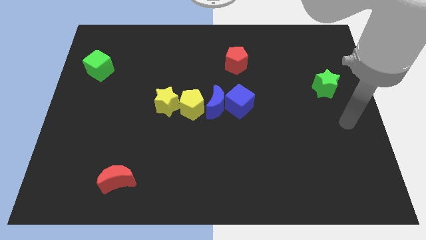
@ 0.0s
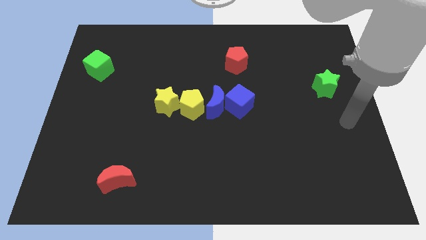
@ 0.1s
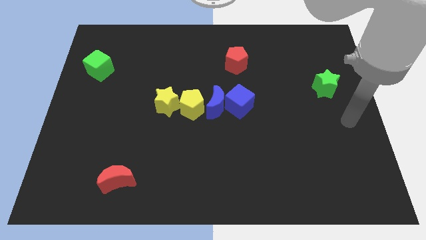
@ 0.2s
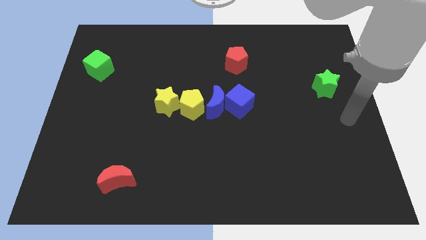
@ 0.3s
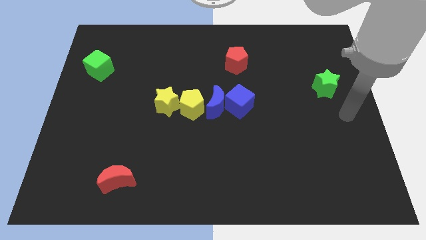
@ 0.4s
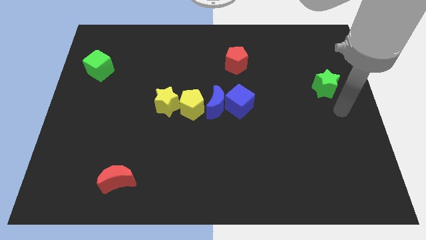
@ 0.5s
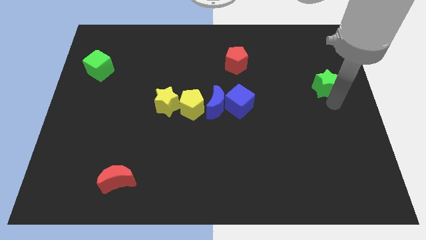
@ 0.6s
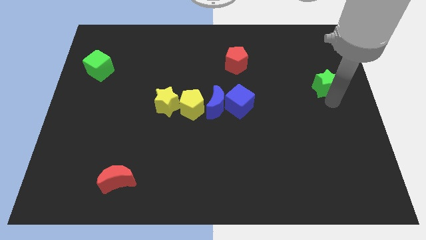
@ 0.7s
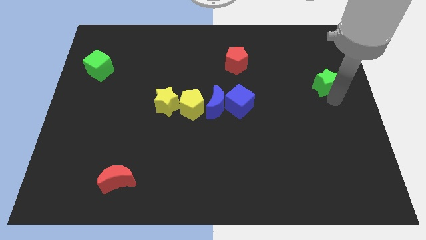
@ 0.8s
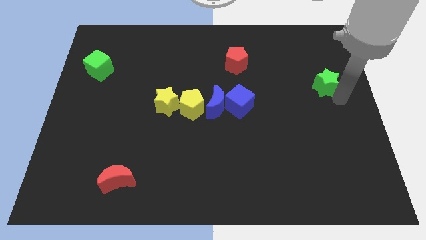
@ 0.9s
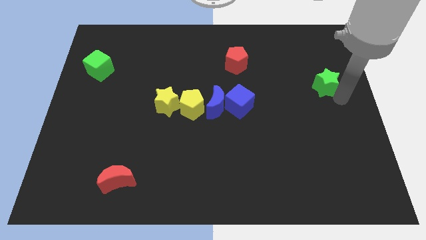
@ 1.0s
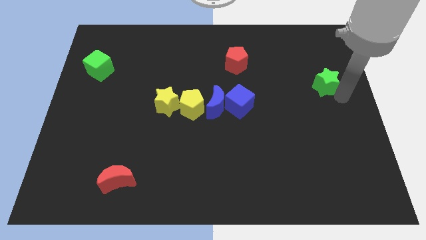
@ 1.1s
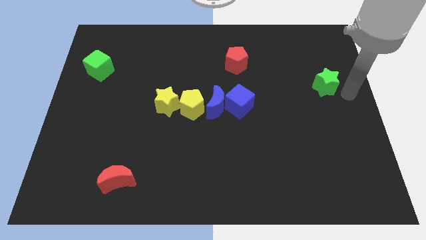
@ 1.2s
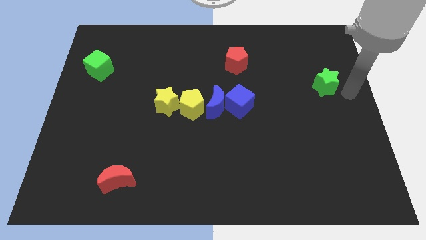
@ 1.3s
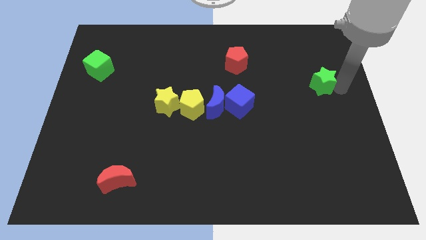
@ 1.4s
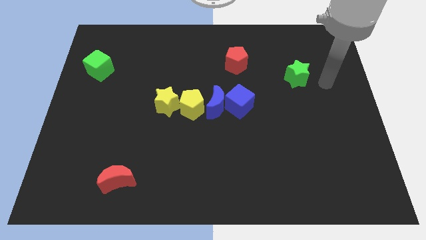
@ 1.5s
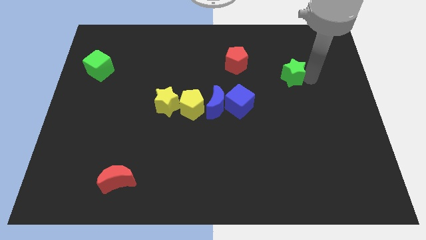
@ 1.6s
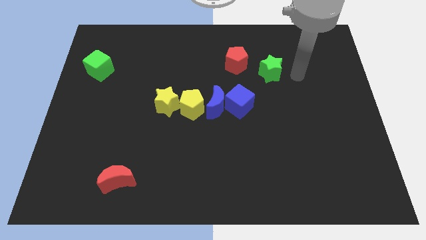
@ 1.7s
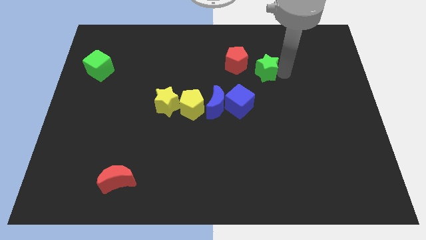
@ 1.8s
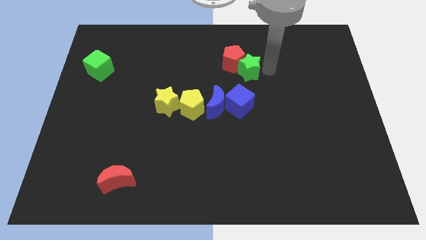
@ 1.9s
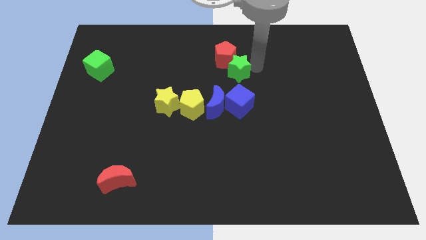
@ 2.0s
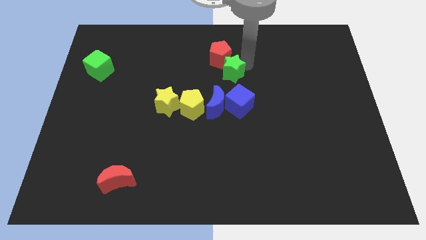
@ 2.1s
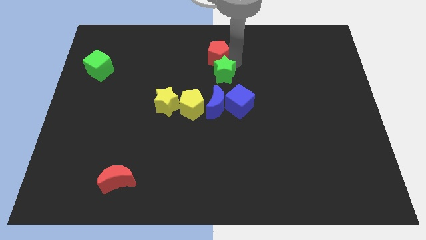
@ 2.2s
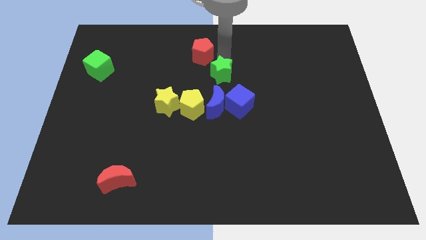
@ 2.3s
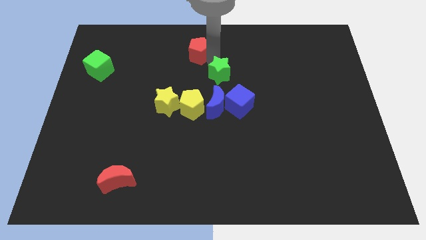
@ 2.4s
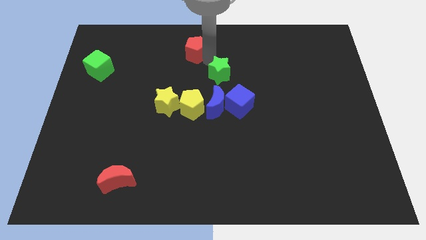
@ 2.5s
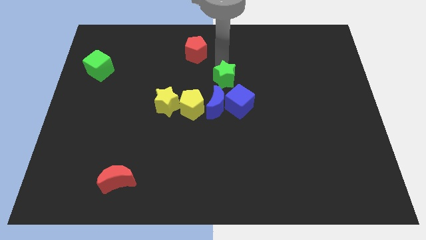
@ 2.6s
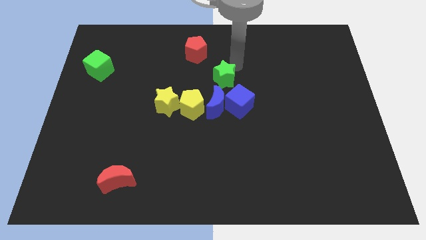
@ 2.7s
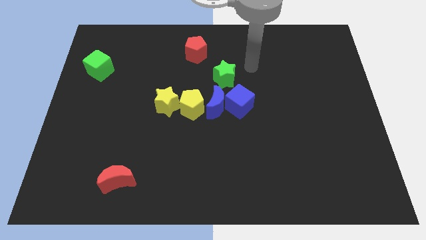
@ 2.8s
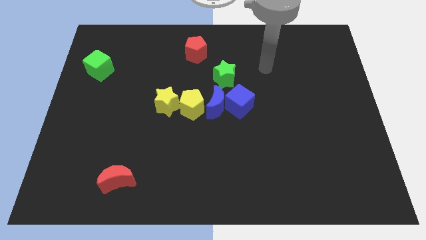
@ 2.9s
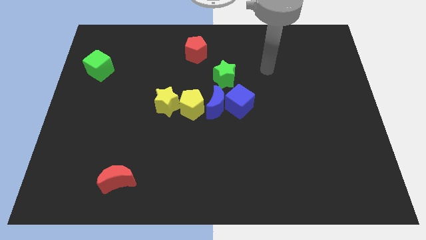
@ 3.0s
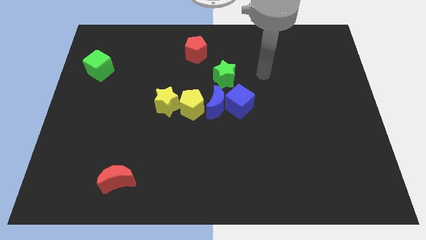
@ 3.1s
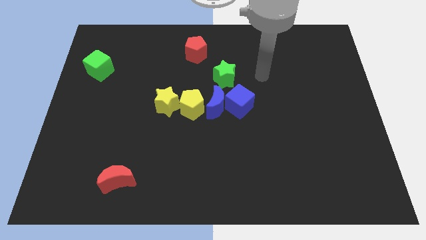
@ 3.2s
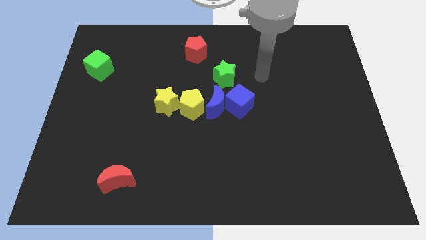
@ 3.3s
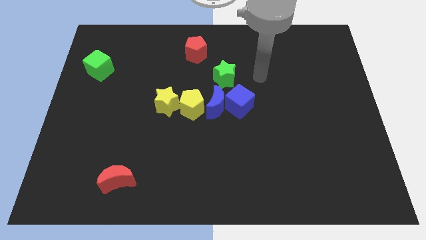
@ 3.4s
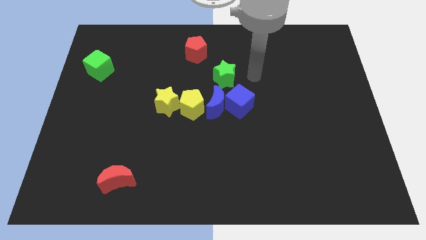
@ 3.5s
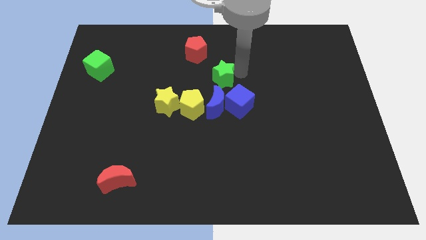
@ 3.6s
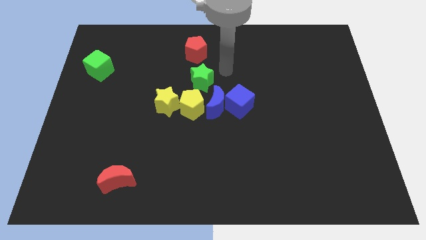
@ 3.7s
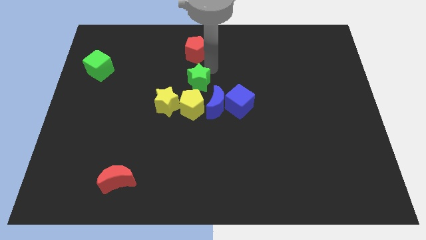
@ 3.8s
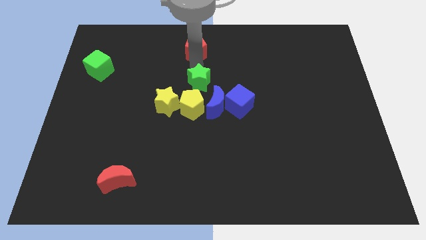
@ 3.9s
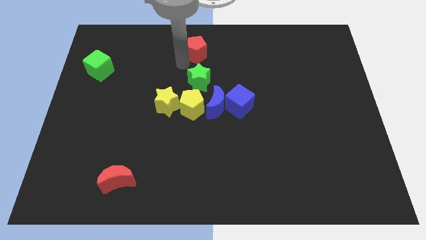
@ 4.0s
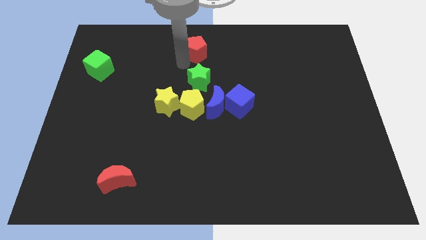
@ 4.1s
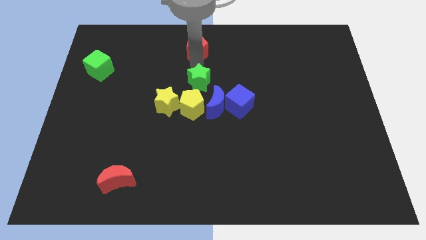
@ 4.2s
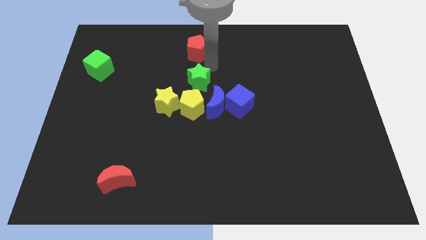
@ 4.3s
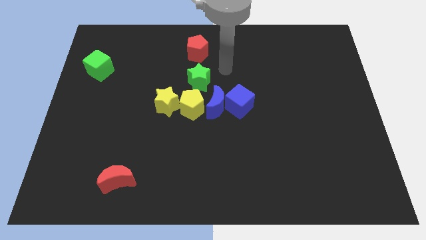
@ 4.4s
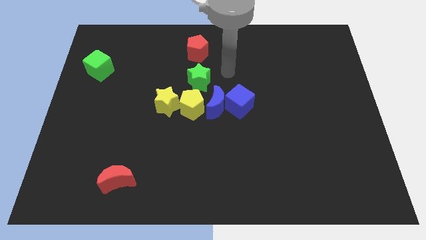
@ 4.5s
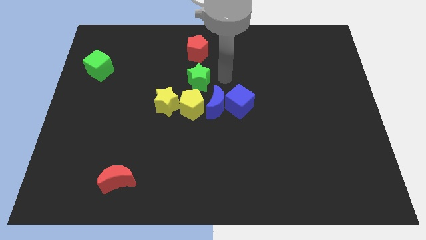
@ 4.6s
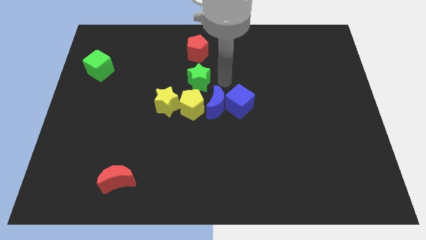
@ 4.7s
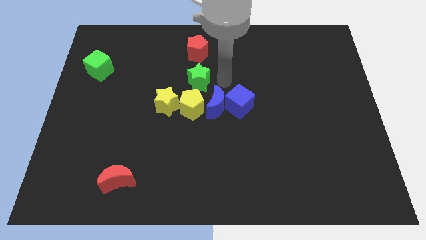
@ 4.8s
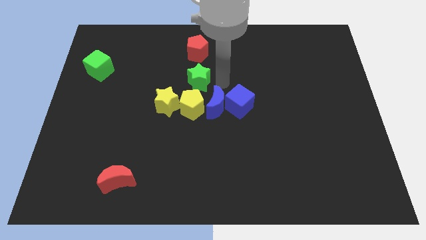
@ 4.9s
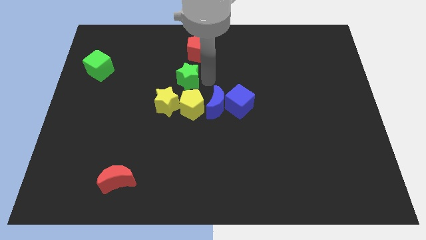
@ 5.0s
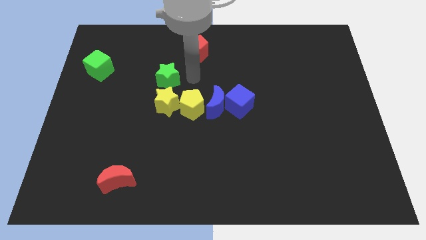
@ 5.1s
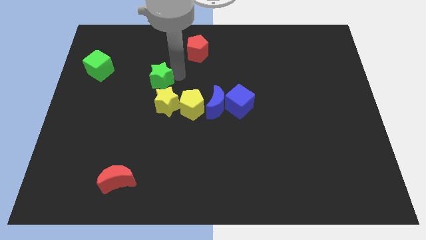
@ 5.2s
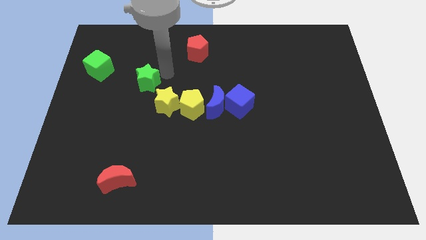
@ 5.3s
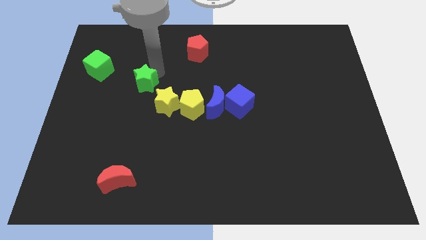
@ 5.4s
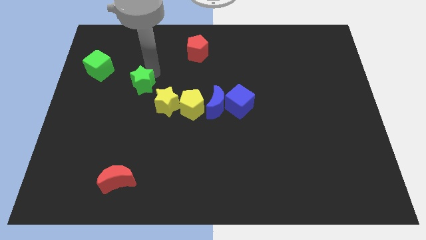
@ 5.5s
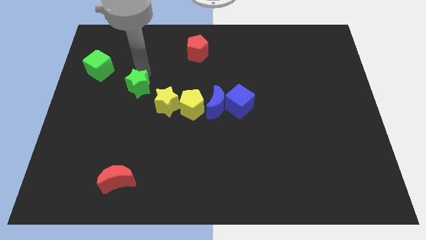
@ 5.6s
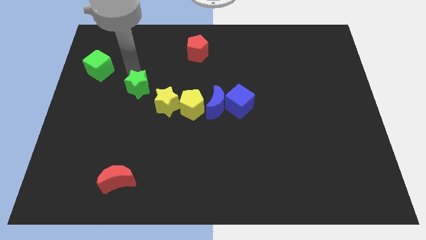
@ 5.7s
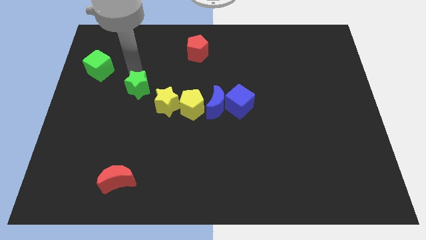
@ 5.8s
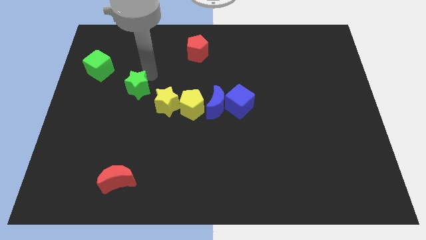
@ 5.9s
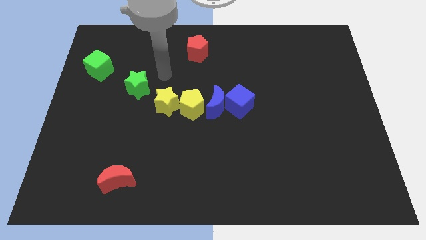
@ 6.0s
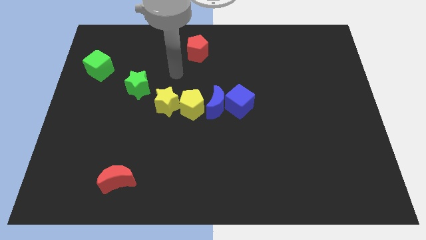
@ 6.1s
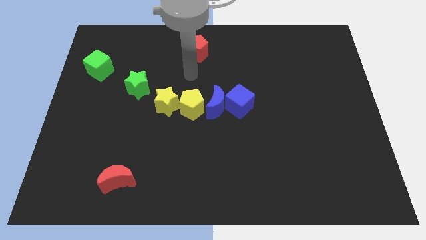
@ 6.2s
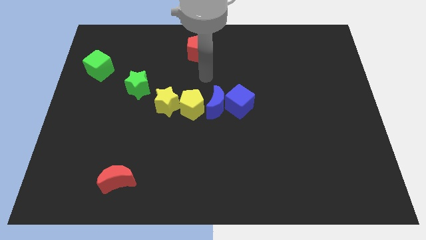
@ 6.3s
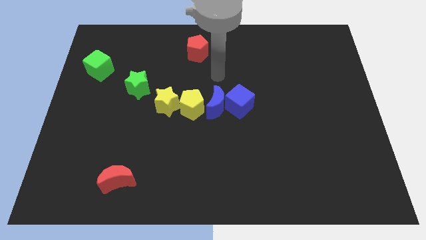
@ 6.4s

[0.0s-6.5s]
push the top right green start to the top left green cube

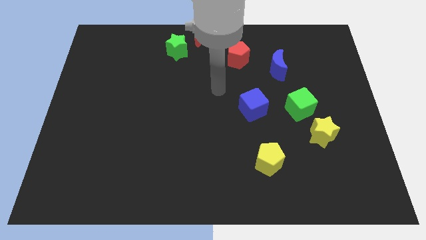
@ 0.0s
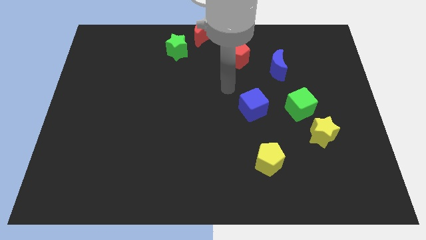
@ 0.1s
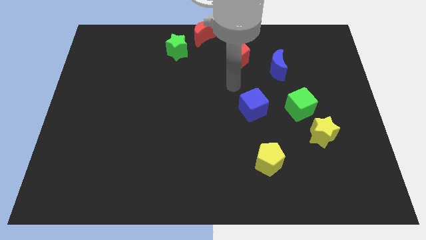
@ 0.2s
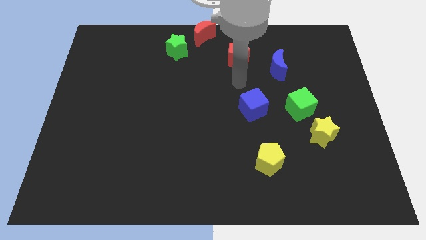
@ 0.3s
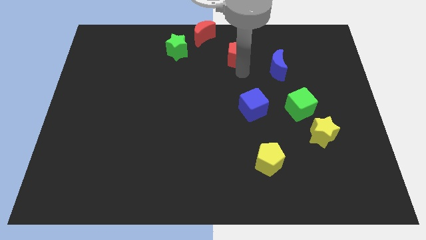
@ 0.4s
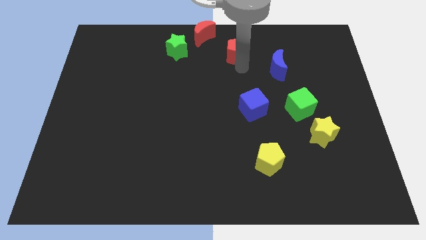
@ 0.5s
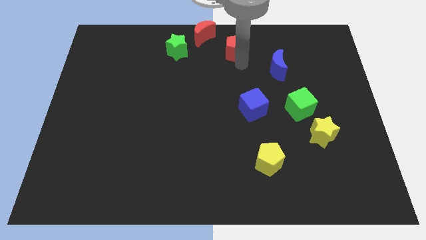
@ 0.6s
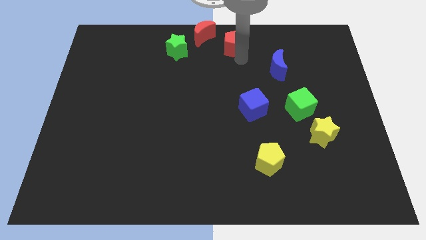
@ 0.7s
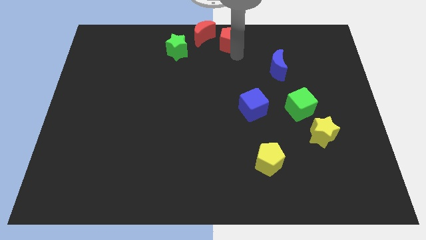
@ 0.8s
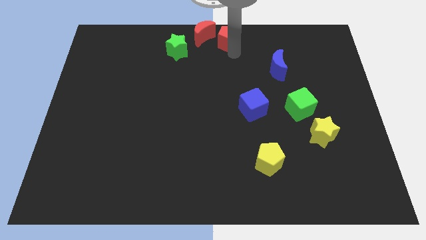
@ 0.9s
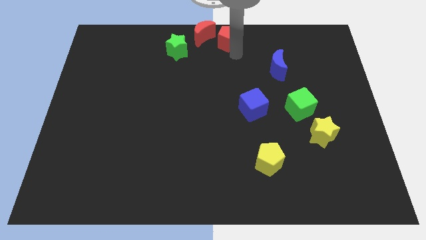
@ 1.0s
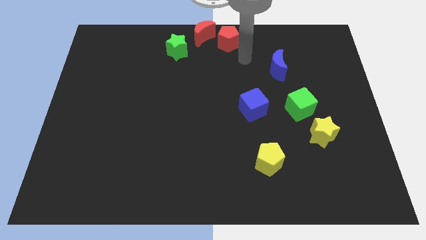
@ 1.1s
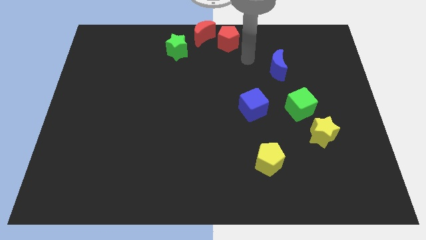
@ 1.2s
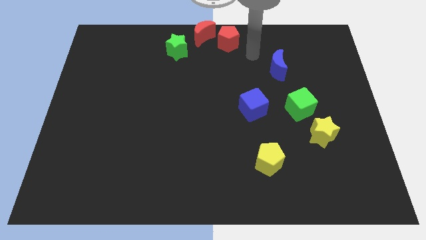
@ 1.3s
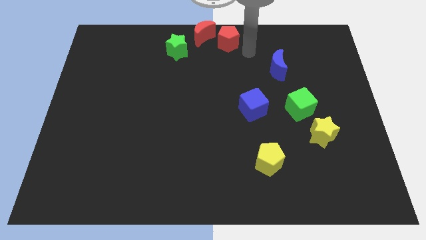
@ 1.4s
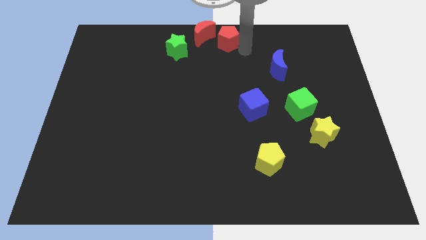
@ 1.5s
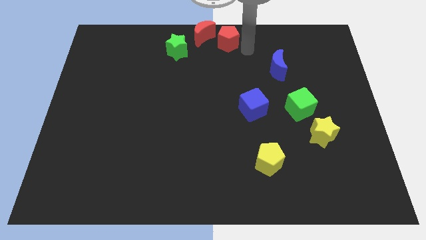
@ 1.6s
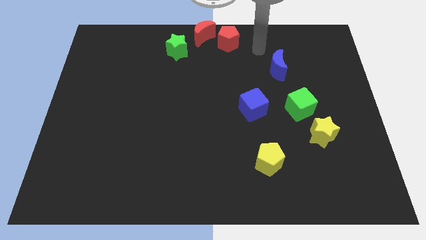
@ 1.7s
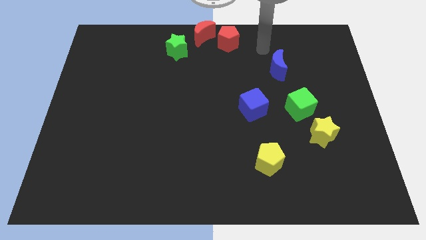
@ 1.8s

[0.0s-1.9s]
place red pentagon to the right of red moon

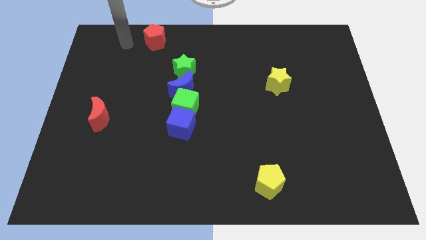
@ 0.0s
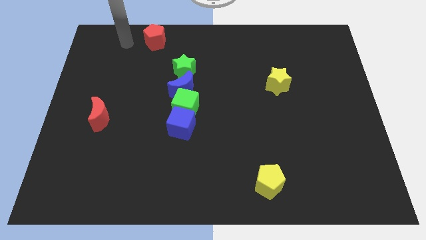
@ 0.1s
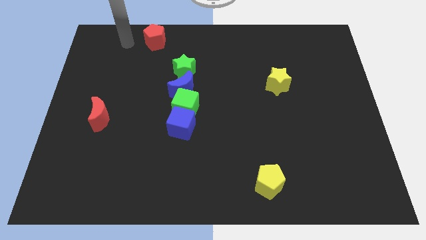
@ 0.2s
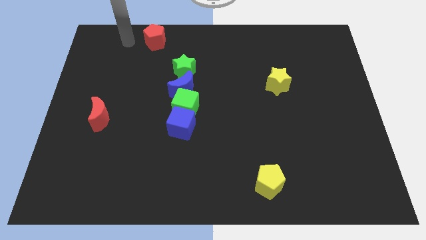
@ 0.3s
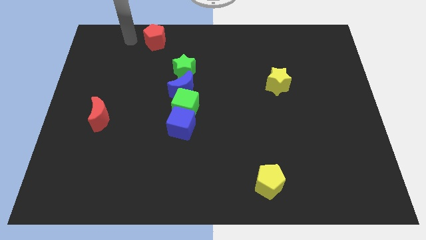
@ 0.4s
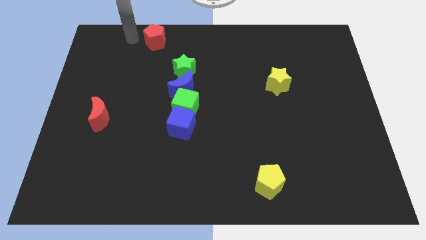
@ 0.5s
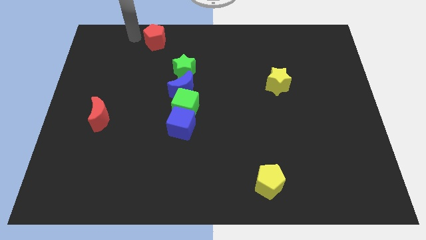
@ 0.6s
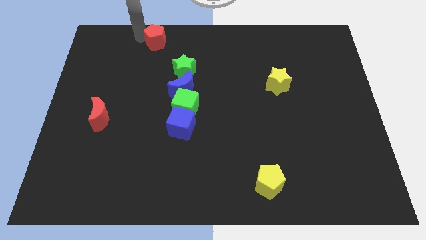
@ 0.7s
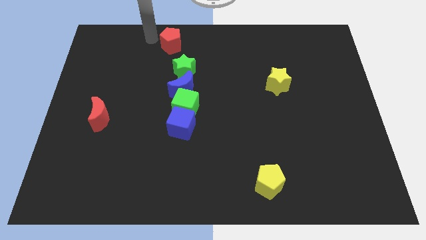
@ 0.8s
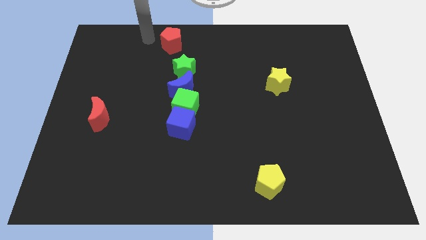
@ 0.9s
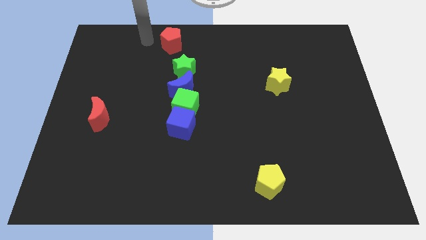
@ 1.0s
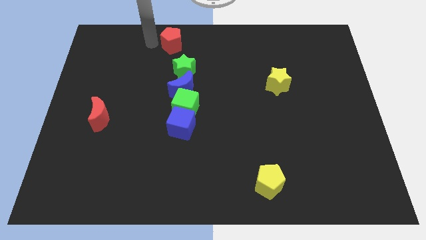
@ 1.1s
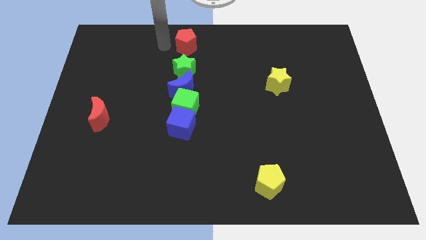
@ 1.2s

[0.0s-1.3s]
move the red pentagon to the top of the green star
